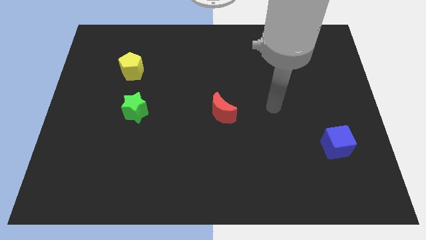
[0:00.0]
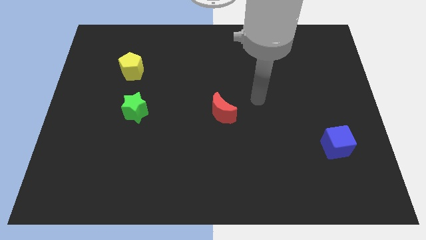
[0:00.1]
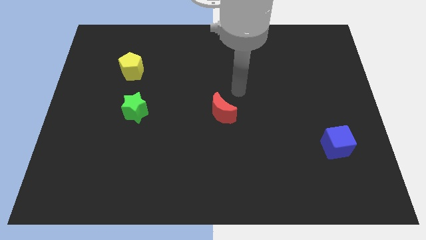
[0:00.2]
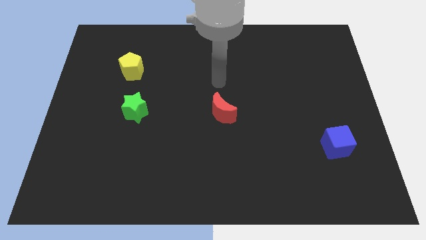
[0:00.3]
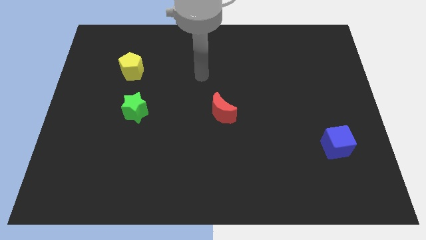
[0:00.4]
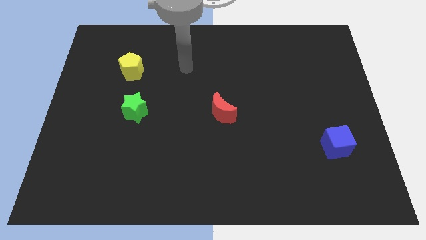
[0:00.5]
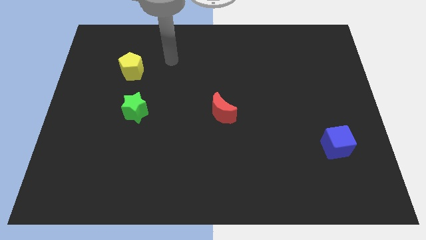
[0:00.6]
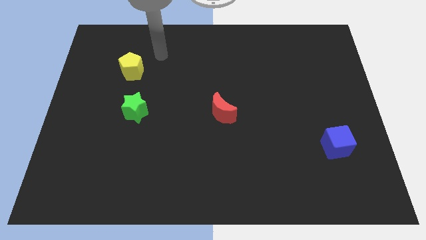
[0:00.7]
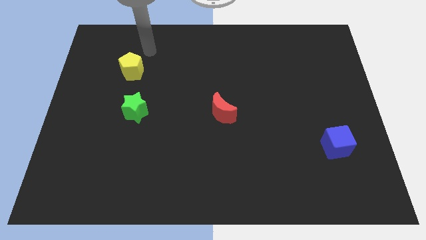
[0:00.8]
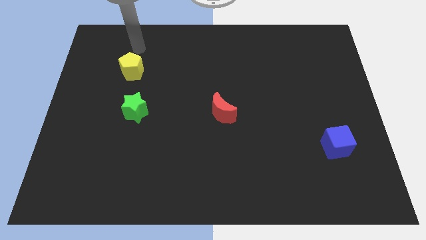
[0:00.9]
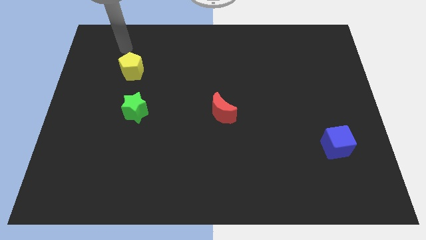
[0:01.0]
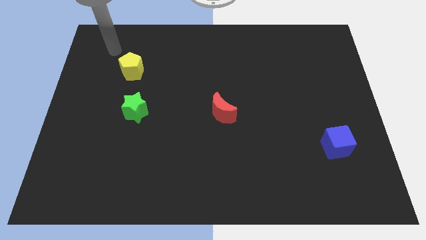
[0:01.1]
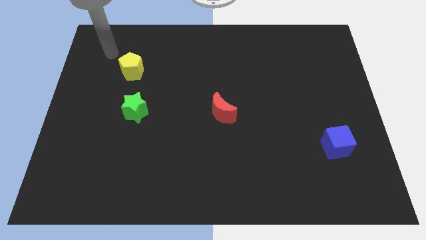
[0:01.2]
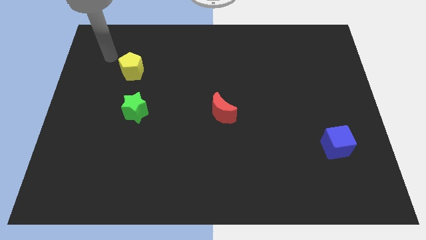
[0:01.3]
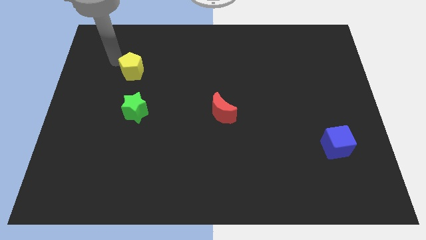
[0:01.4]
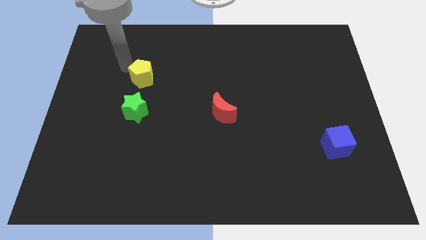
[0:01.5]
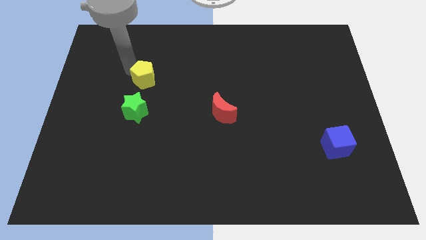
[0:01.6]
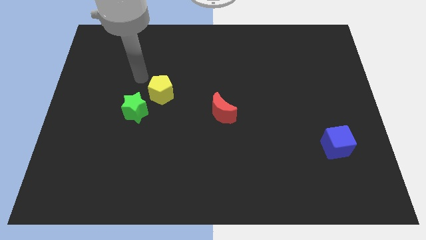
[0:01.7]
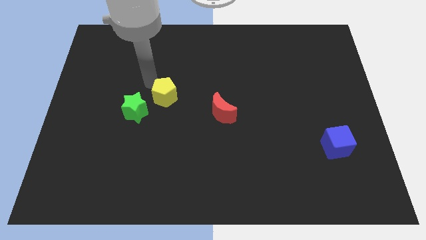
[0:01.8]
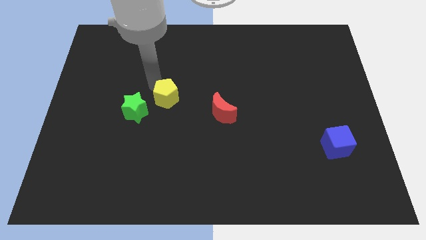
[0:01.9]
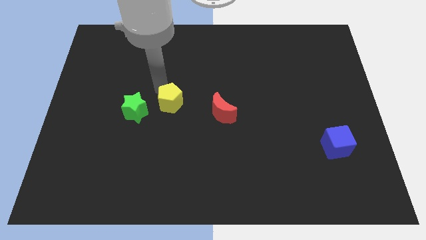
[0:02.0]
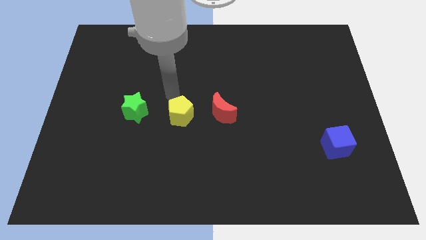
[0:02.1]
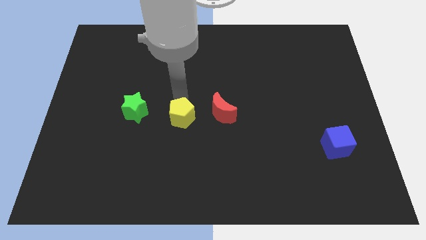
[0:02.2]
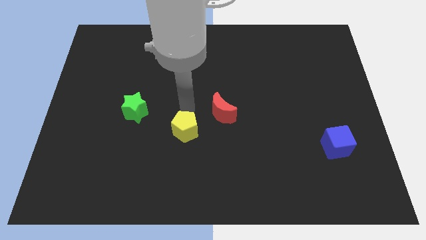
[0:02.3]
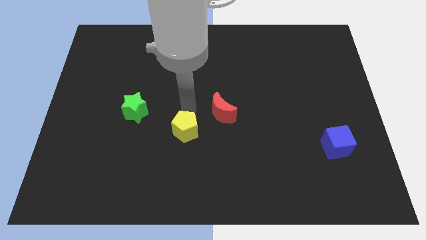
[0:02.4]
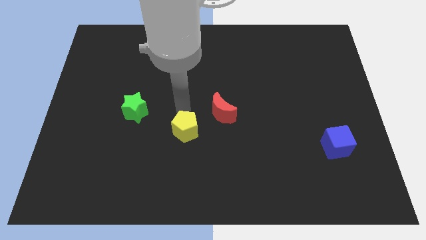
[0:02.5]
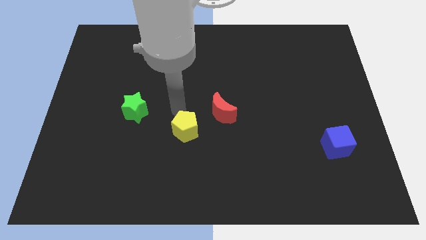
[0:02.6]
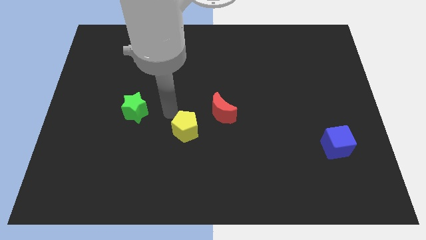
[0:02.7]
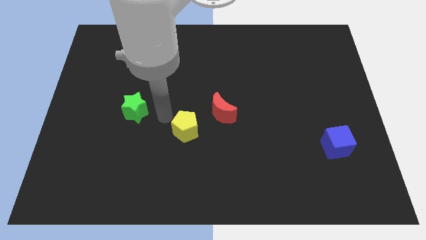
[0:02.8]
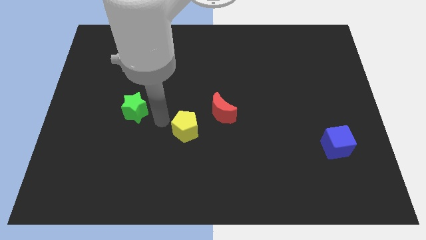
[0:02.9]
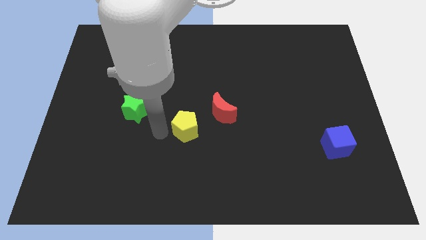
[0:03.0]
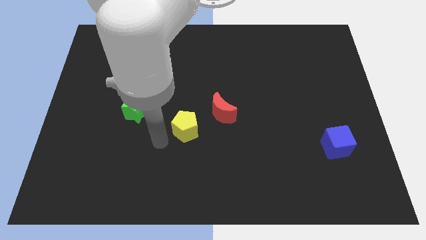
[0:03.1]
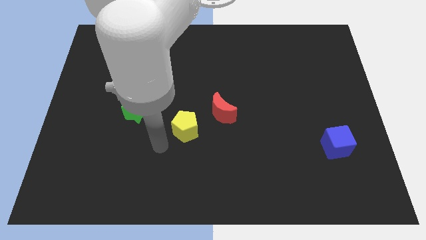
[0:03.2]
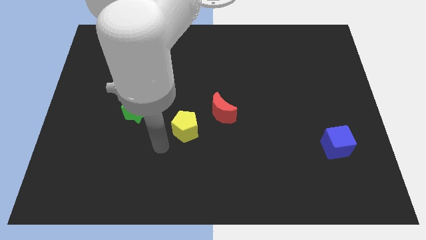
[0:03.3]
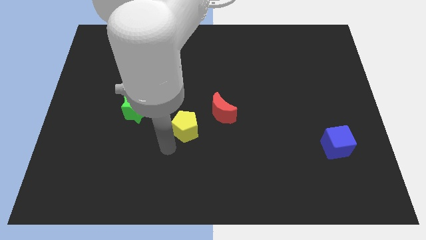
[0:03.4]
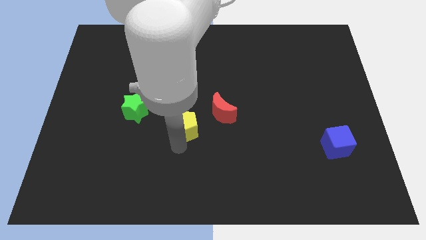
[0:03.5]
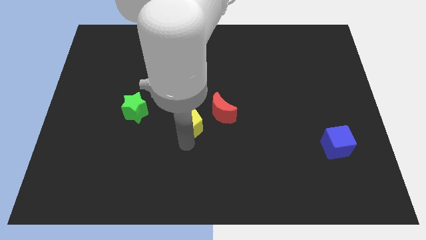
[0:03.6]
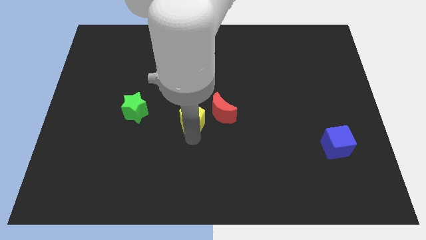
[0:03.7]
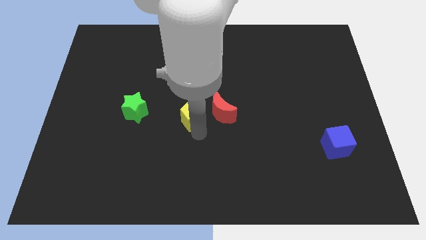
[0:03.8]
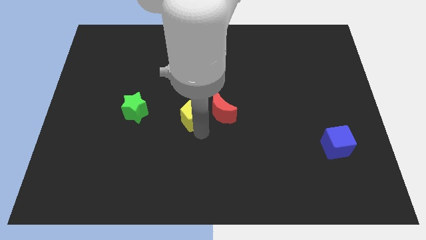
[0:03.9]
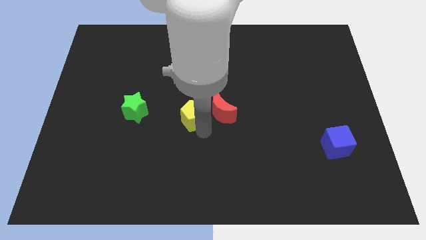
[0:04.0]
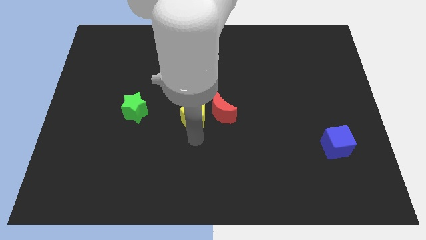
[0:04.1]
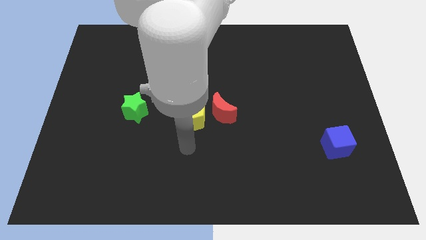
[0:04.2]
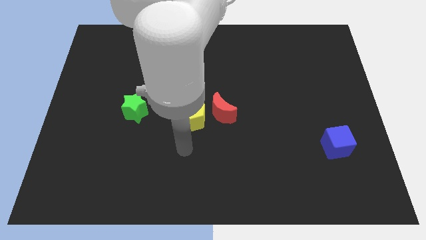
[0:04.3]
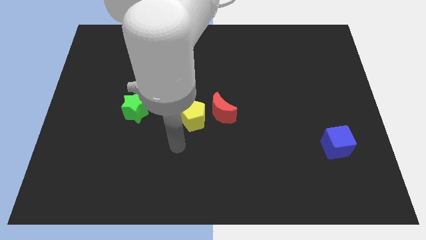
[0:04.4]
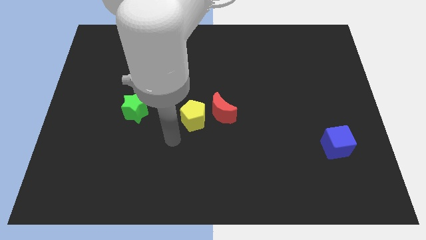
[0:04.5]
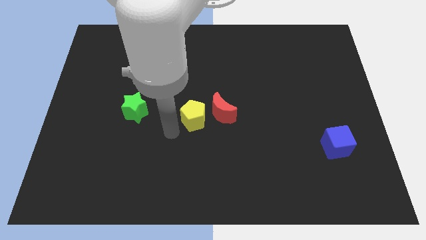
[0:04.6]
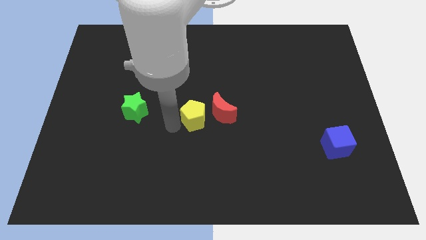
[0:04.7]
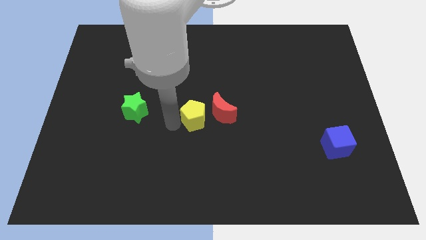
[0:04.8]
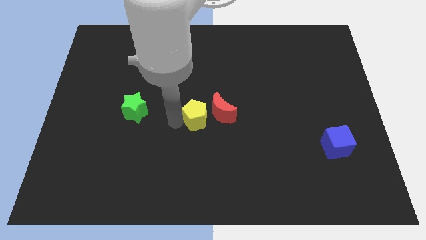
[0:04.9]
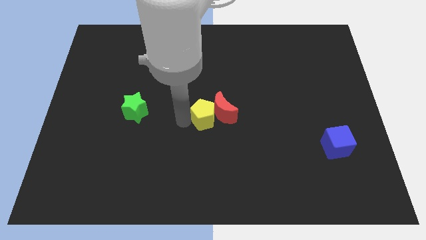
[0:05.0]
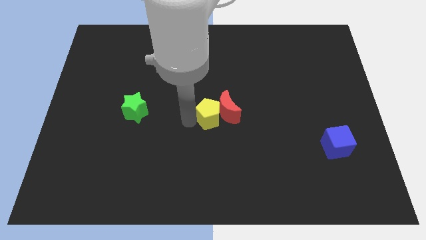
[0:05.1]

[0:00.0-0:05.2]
move the yellow block towards the red block

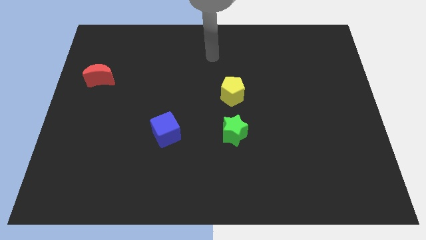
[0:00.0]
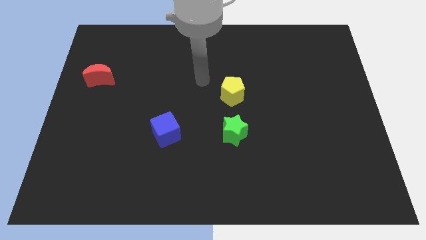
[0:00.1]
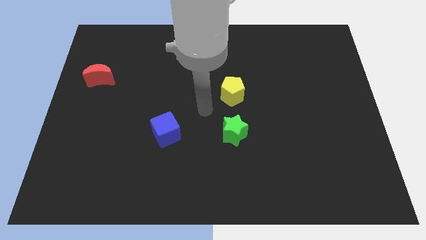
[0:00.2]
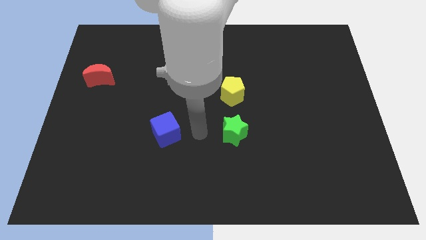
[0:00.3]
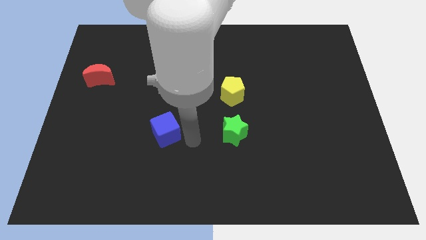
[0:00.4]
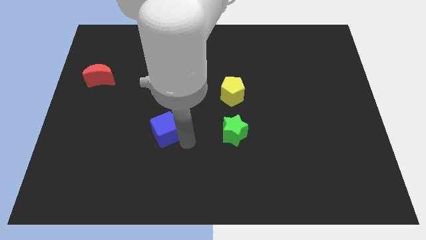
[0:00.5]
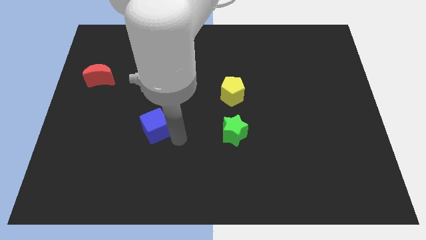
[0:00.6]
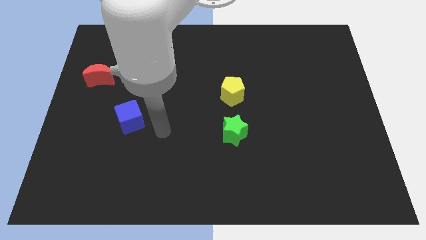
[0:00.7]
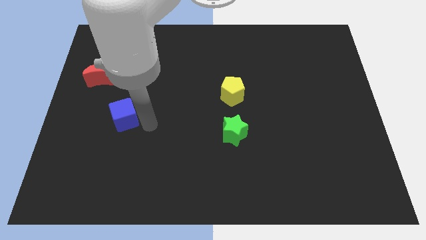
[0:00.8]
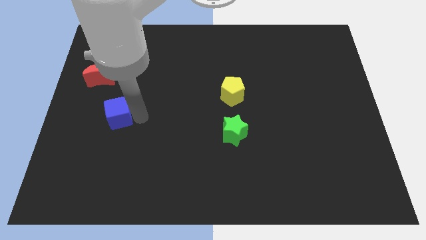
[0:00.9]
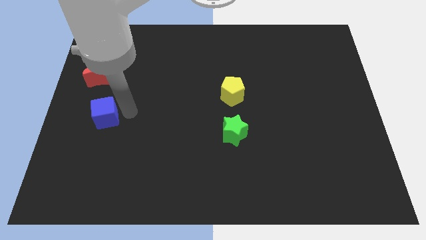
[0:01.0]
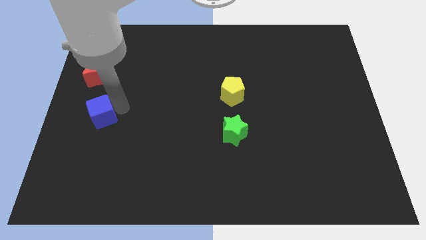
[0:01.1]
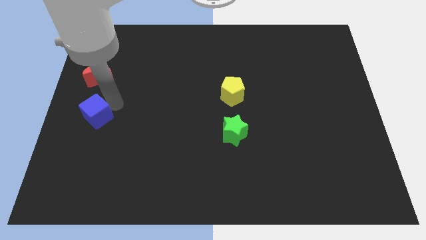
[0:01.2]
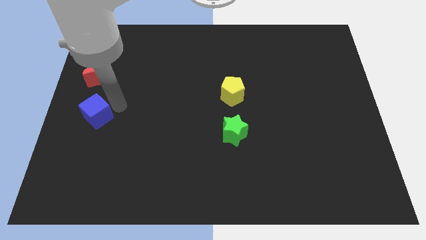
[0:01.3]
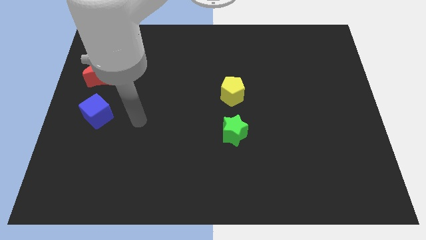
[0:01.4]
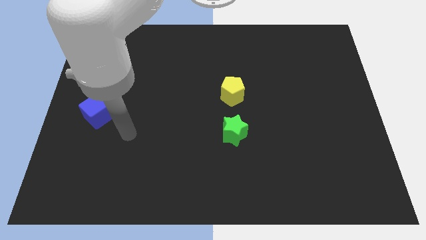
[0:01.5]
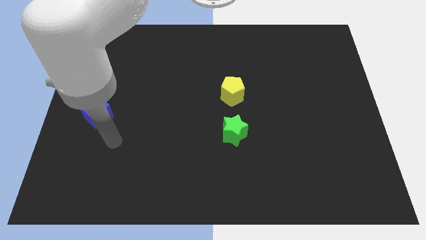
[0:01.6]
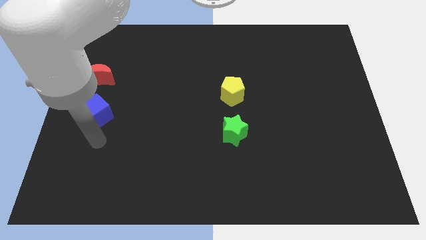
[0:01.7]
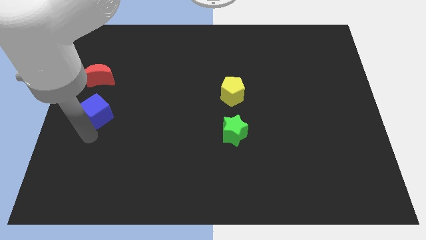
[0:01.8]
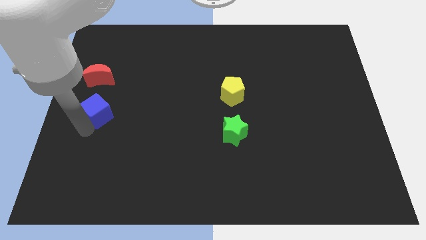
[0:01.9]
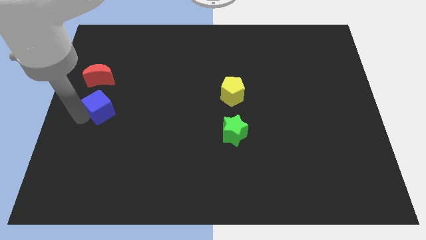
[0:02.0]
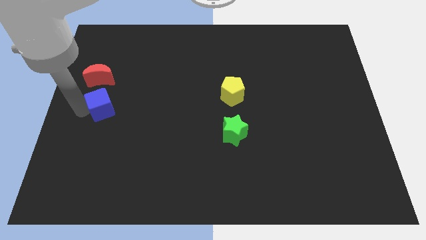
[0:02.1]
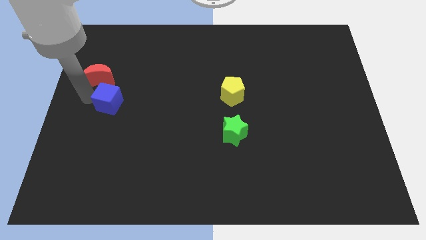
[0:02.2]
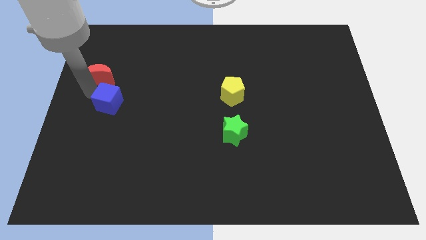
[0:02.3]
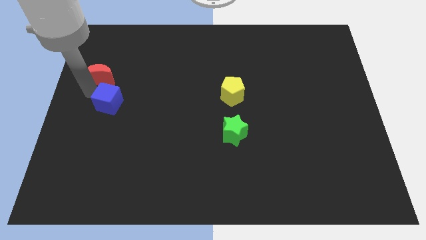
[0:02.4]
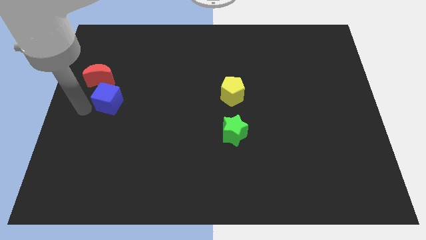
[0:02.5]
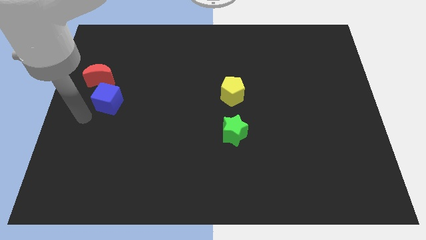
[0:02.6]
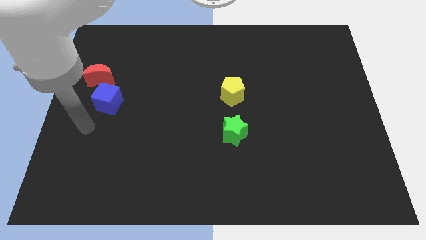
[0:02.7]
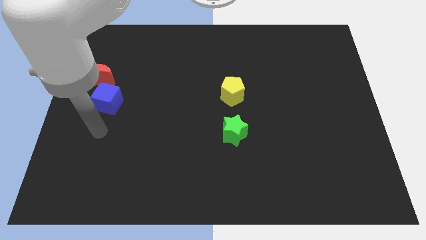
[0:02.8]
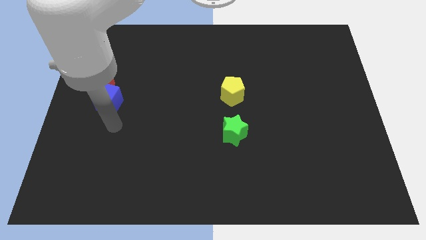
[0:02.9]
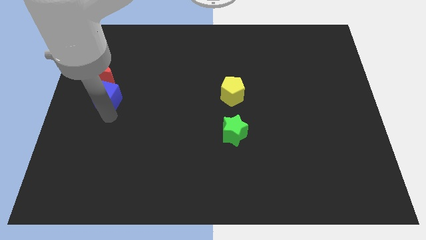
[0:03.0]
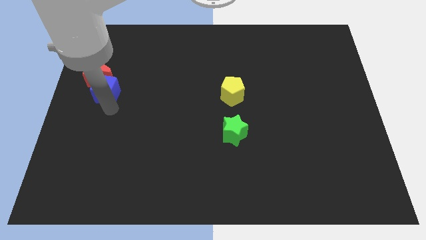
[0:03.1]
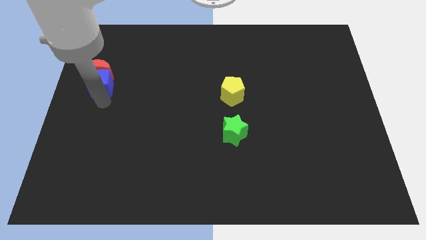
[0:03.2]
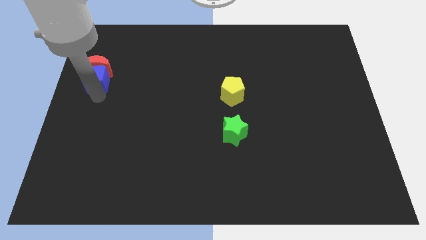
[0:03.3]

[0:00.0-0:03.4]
move the blue cube next to the moon
